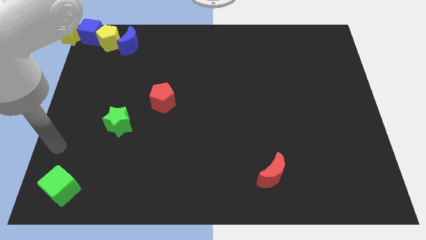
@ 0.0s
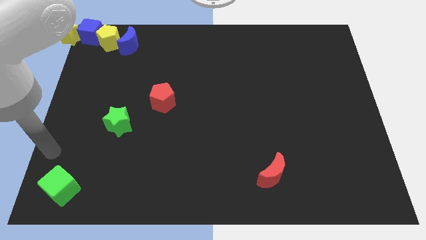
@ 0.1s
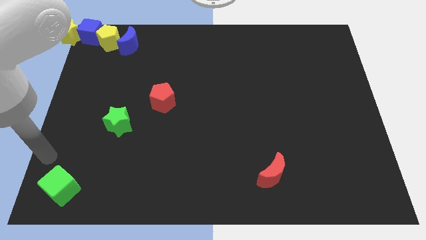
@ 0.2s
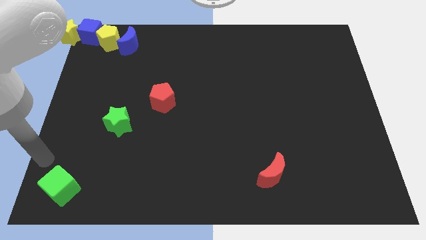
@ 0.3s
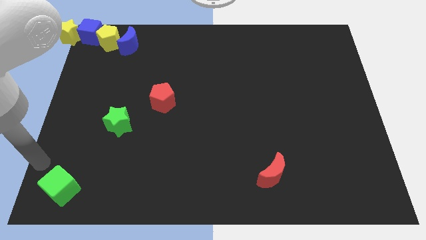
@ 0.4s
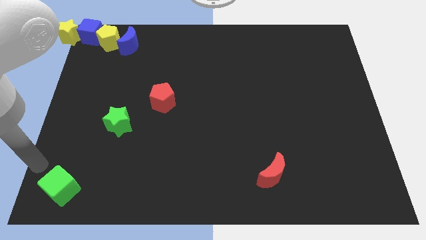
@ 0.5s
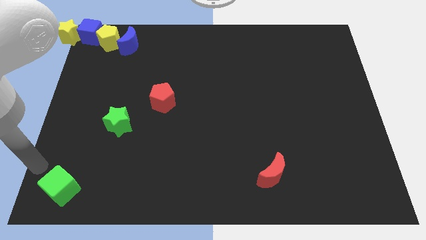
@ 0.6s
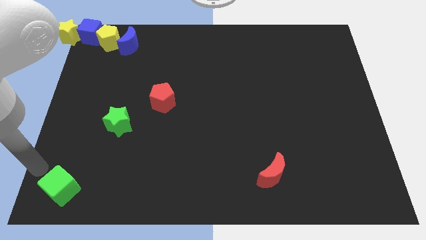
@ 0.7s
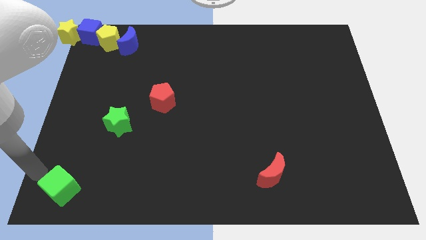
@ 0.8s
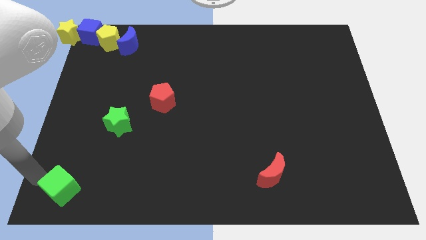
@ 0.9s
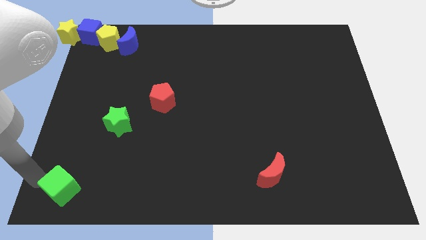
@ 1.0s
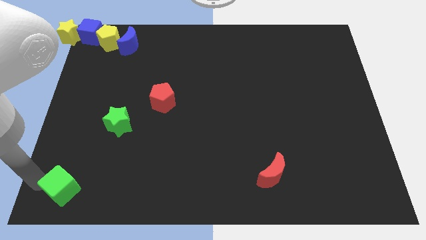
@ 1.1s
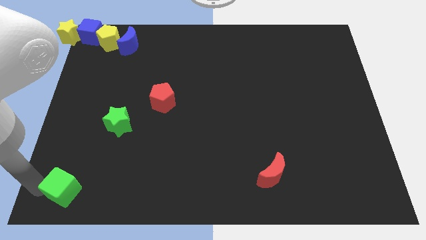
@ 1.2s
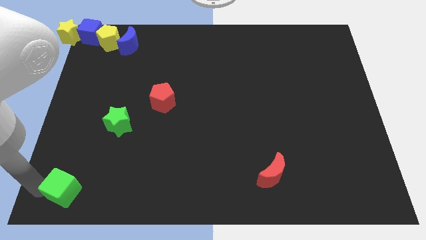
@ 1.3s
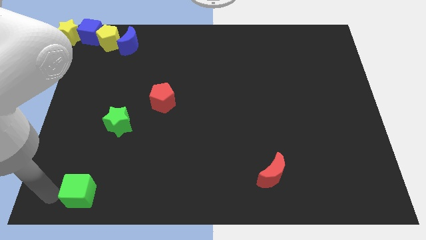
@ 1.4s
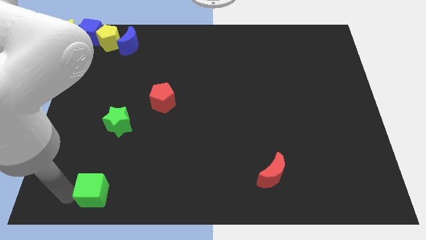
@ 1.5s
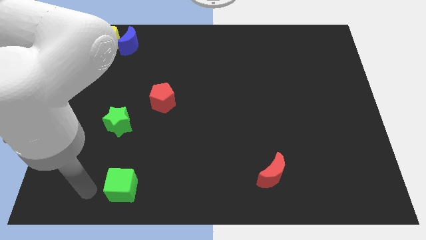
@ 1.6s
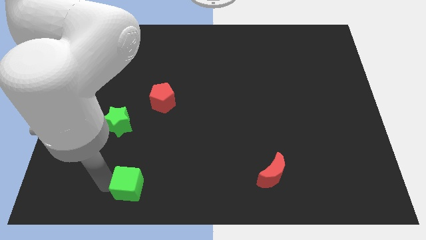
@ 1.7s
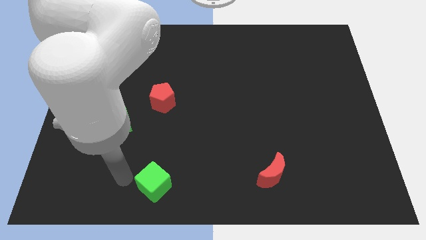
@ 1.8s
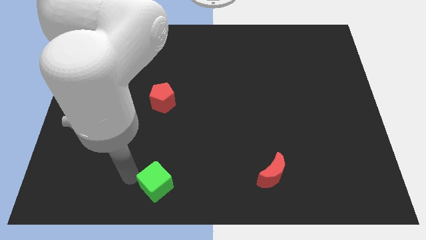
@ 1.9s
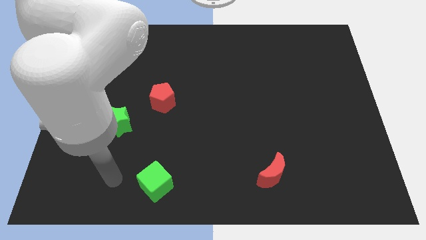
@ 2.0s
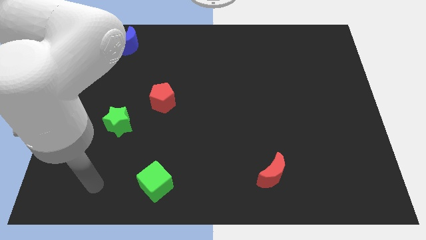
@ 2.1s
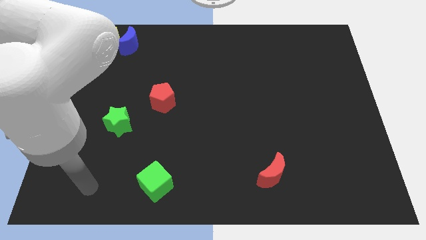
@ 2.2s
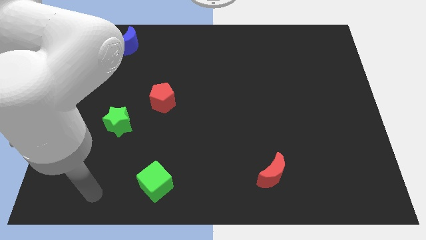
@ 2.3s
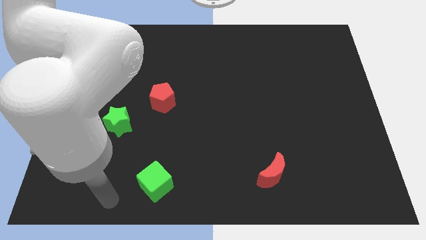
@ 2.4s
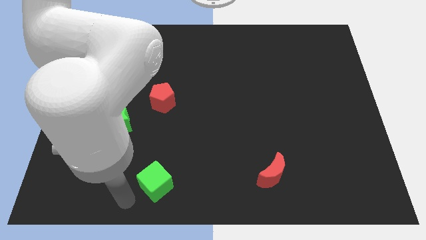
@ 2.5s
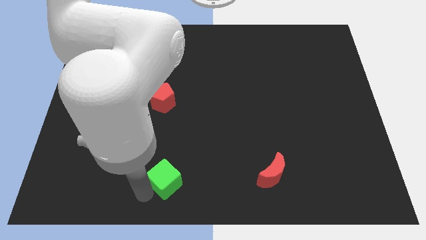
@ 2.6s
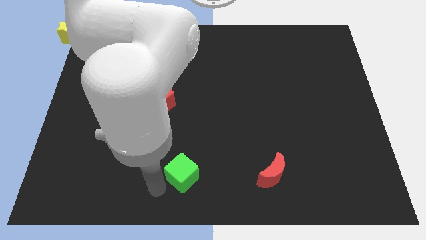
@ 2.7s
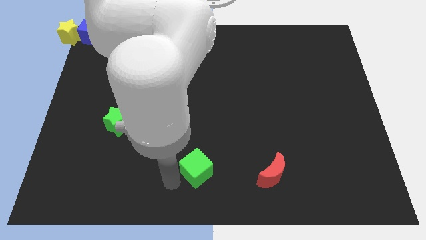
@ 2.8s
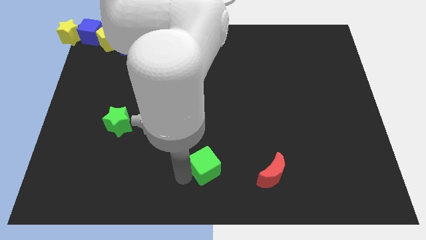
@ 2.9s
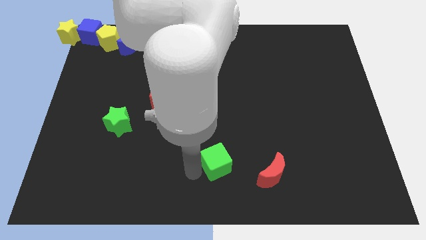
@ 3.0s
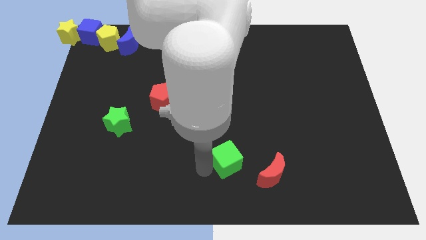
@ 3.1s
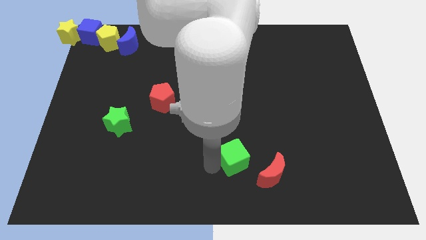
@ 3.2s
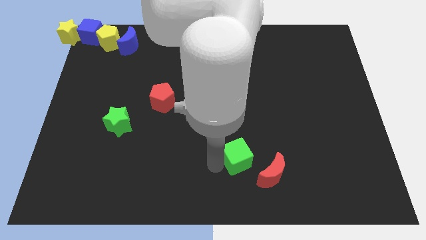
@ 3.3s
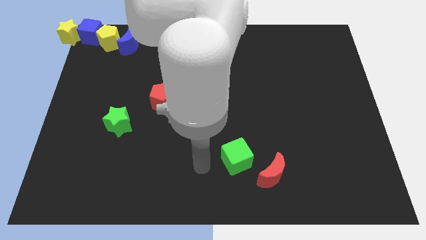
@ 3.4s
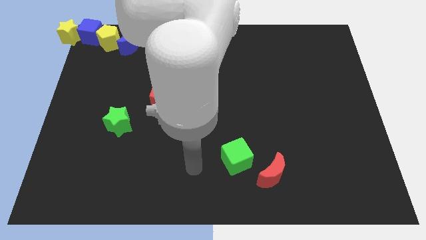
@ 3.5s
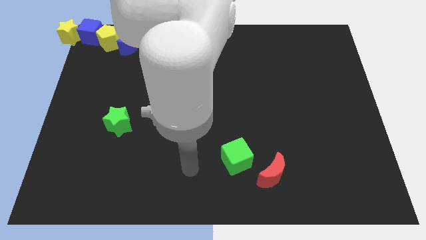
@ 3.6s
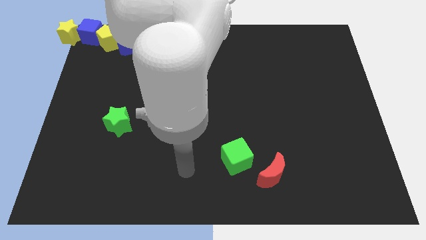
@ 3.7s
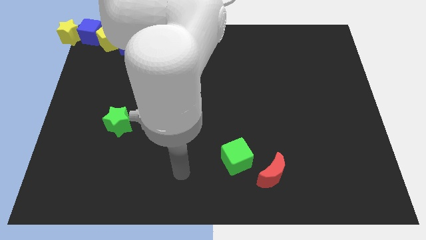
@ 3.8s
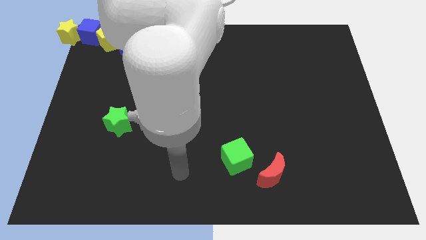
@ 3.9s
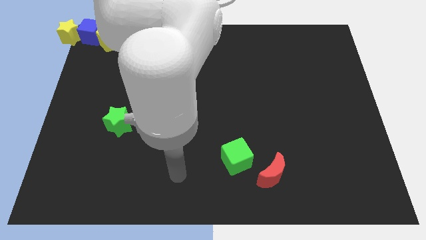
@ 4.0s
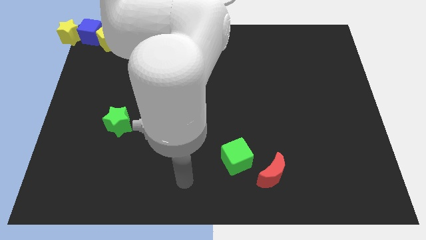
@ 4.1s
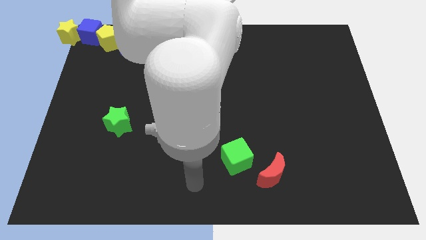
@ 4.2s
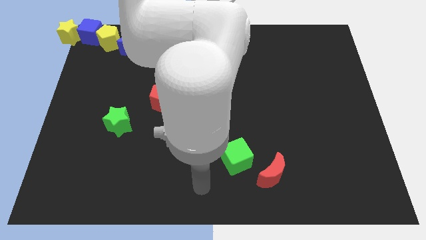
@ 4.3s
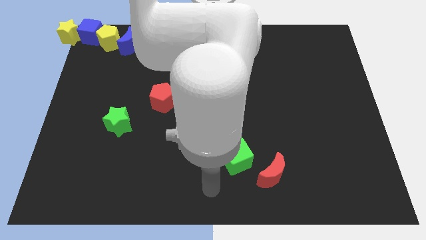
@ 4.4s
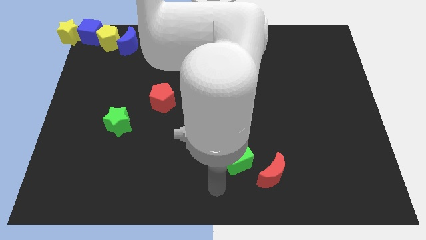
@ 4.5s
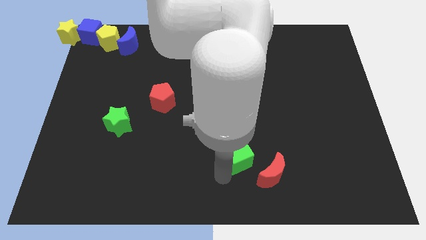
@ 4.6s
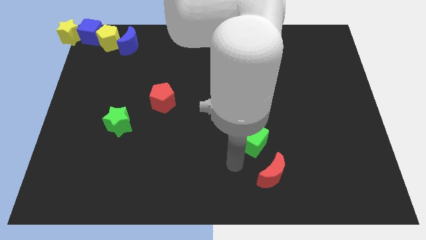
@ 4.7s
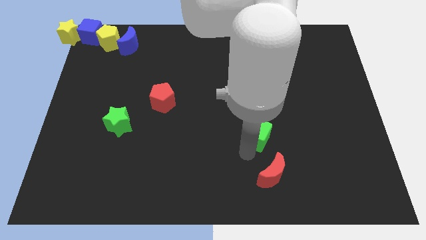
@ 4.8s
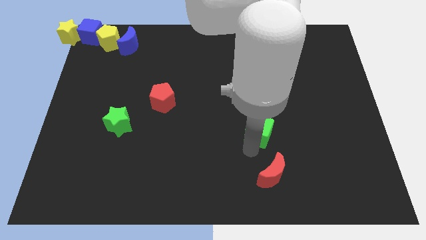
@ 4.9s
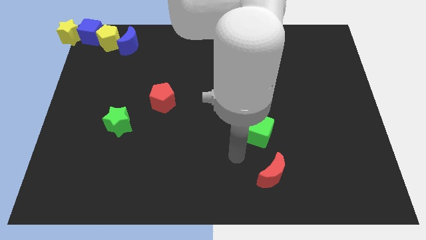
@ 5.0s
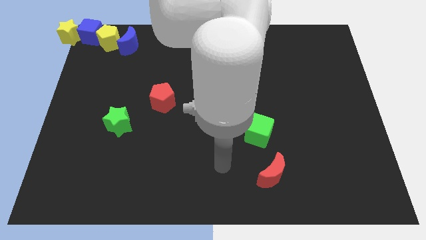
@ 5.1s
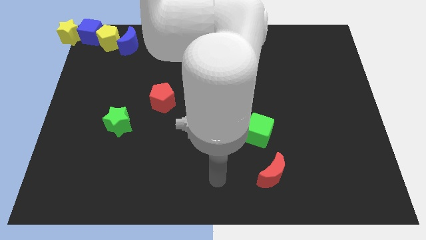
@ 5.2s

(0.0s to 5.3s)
move the green cube to the top of the red crescent

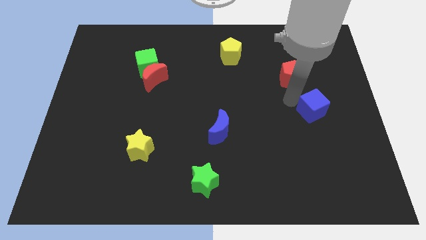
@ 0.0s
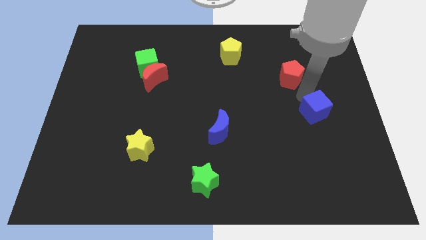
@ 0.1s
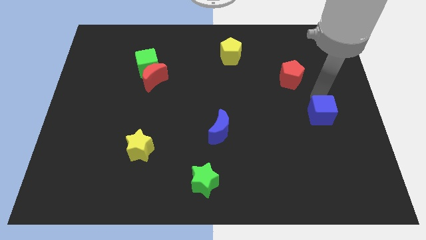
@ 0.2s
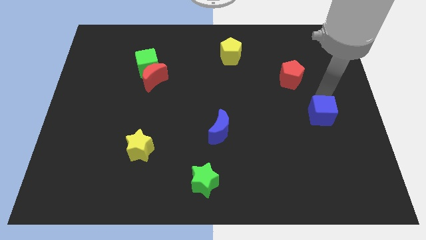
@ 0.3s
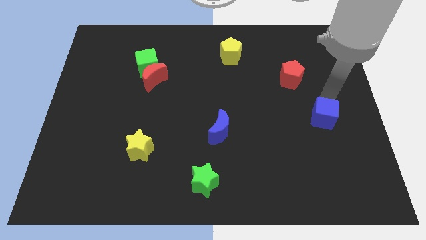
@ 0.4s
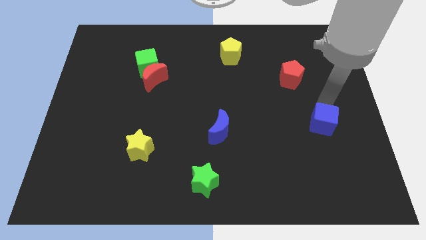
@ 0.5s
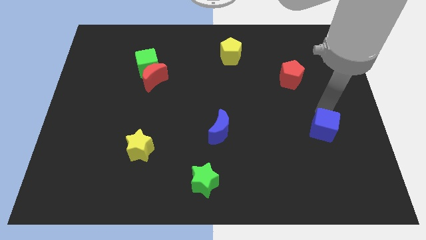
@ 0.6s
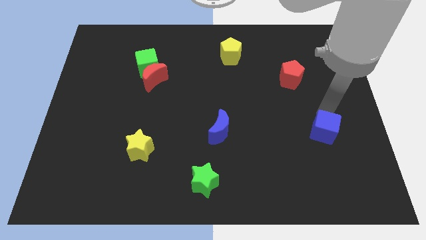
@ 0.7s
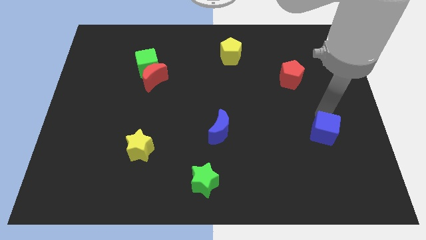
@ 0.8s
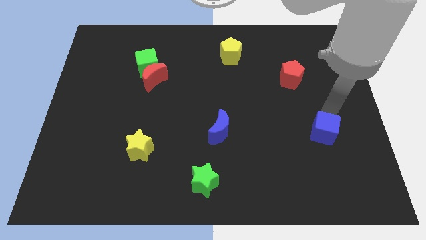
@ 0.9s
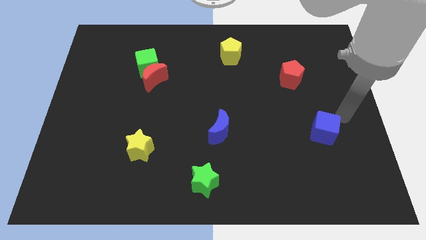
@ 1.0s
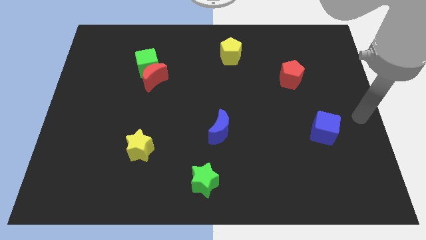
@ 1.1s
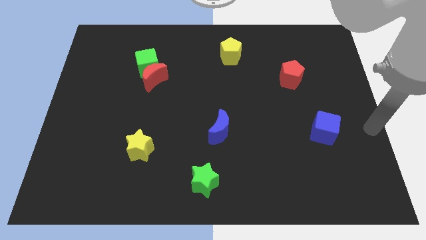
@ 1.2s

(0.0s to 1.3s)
put the blue cube parallel to the blue crescent

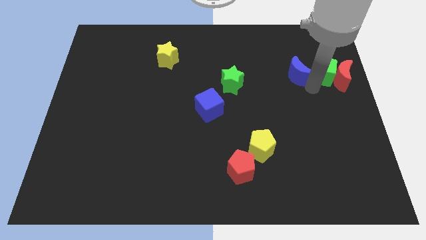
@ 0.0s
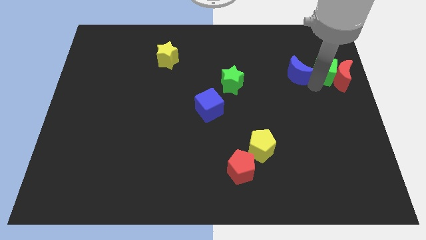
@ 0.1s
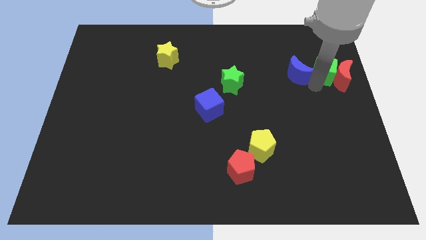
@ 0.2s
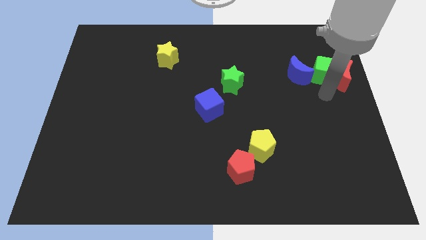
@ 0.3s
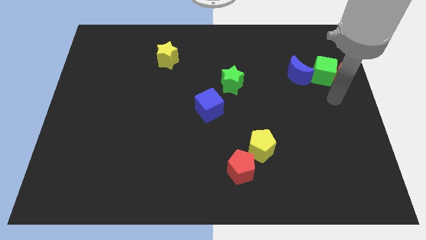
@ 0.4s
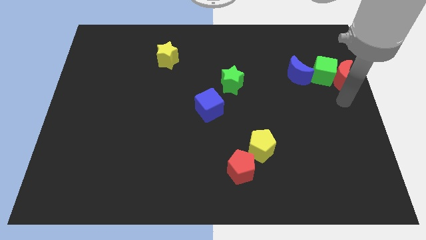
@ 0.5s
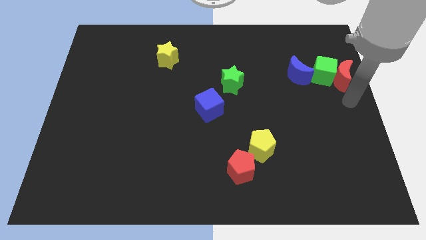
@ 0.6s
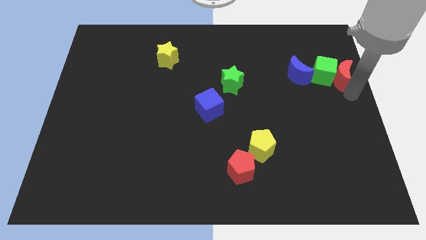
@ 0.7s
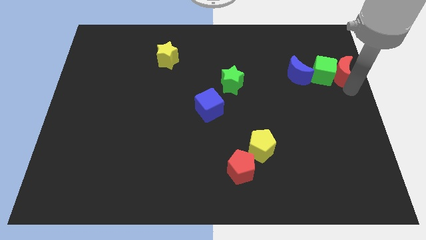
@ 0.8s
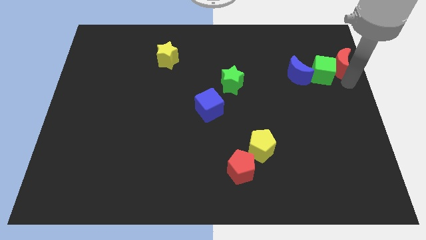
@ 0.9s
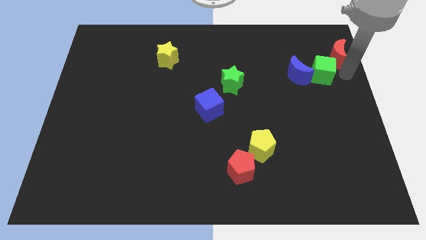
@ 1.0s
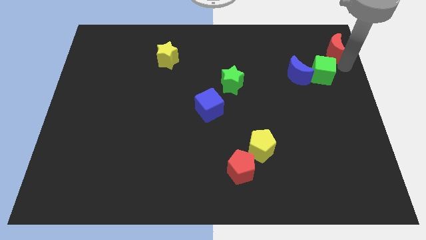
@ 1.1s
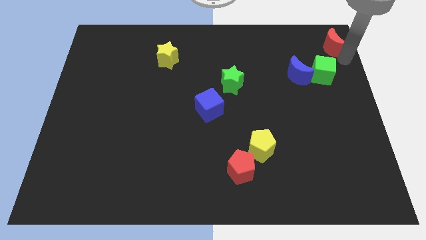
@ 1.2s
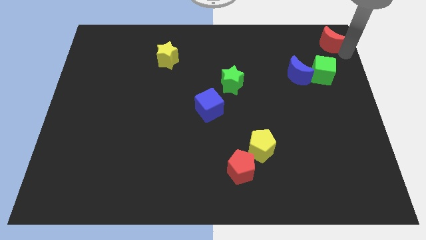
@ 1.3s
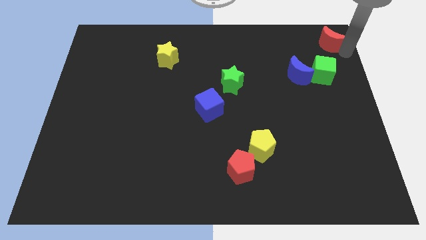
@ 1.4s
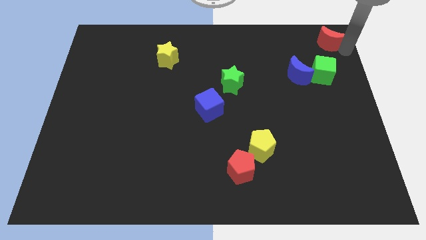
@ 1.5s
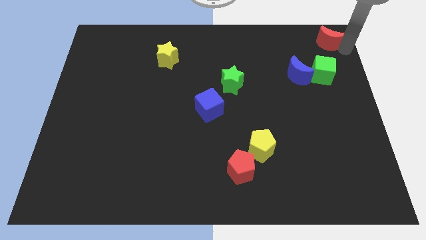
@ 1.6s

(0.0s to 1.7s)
move the red moon diagonally top right to the blue moon

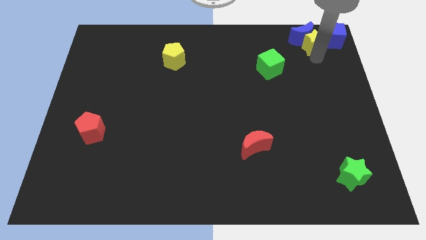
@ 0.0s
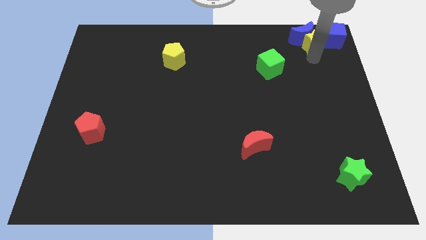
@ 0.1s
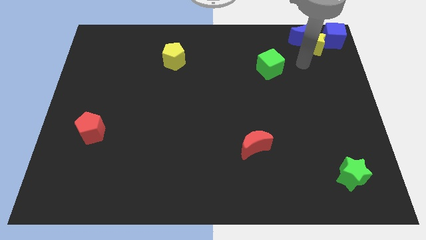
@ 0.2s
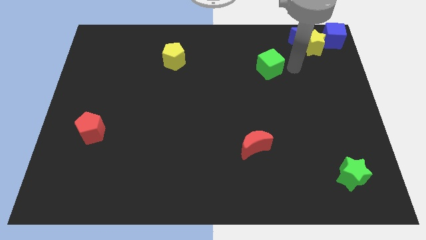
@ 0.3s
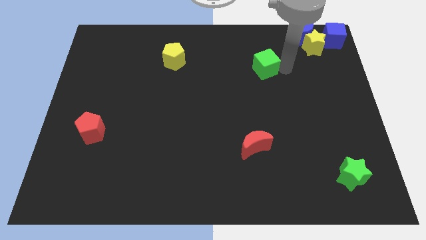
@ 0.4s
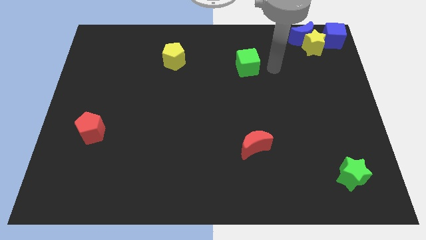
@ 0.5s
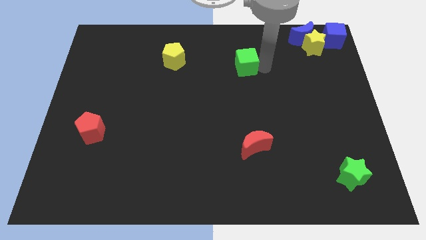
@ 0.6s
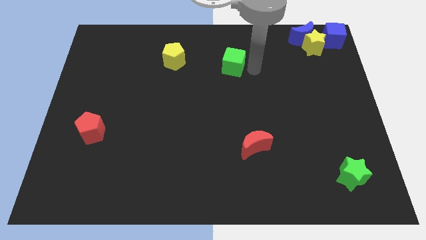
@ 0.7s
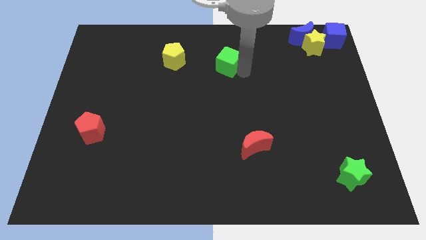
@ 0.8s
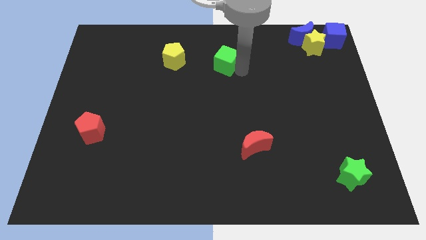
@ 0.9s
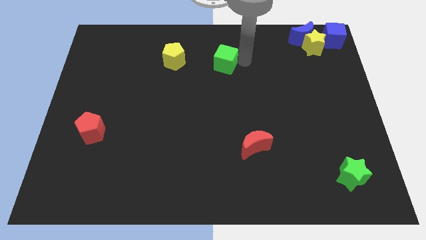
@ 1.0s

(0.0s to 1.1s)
move the green cube diagonal to the left of the yellow pentagon
